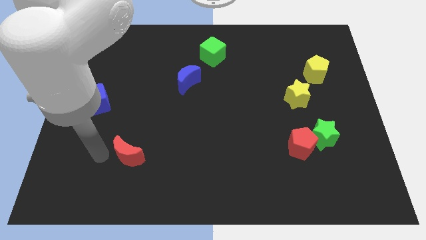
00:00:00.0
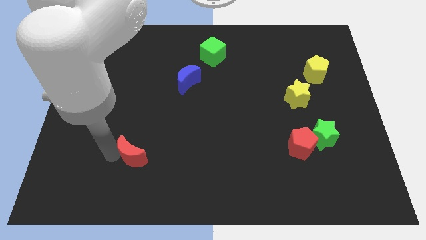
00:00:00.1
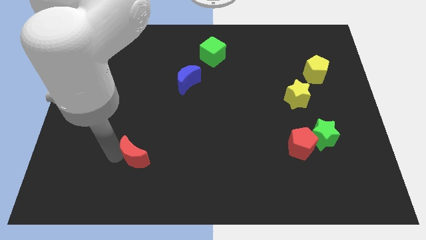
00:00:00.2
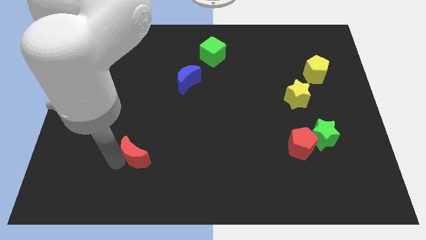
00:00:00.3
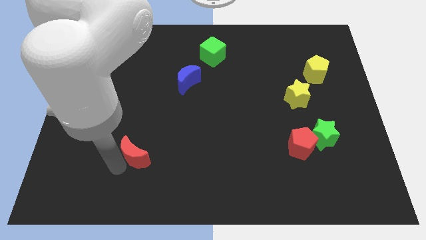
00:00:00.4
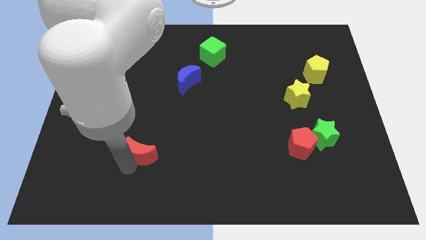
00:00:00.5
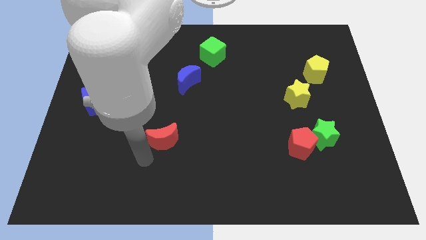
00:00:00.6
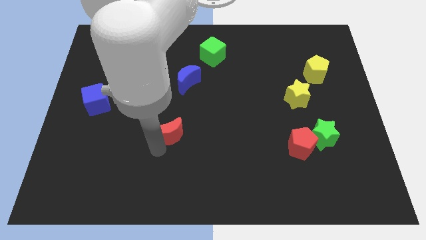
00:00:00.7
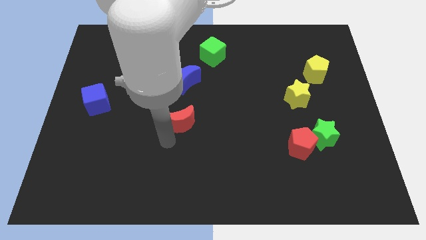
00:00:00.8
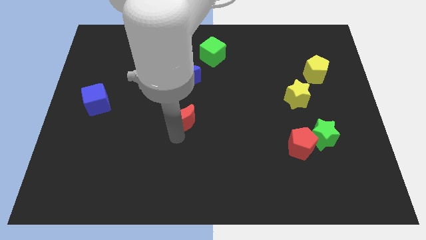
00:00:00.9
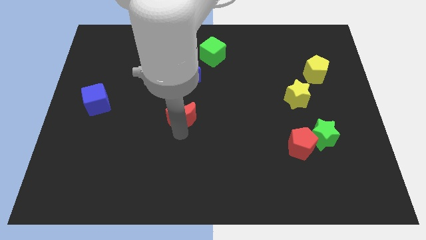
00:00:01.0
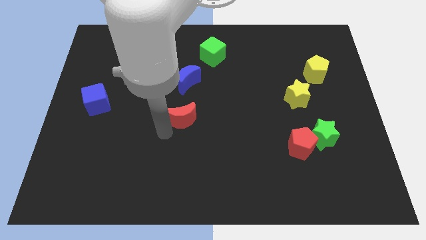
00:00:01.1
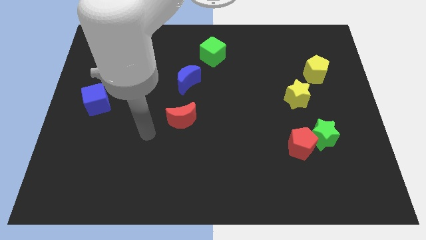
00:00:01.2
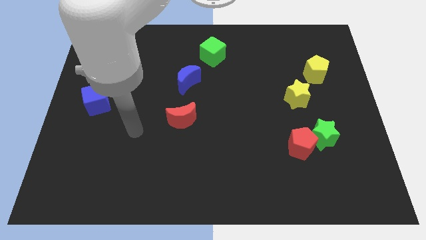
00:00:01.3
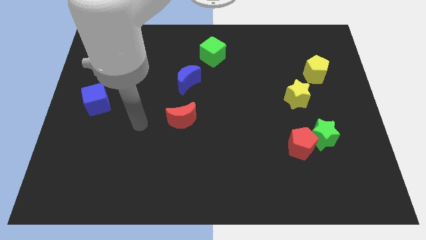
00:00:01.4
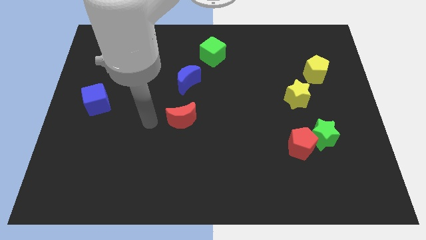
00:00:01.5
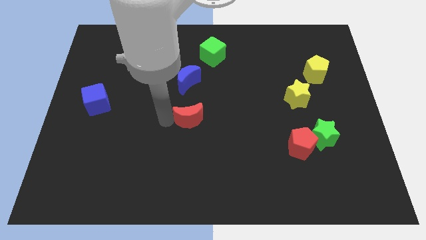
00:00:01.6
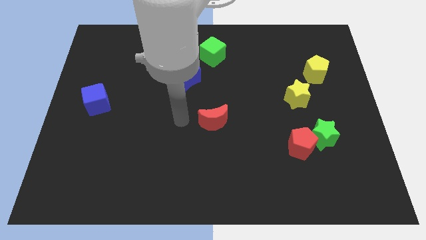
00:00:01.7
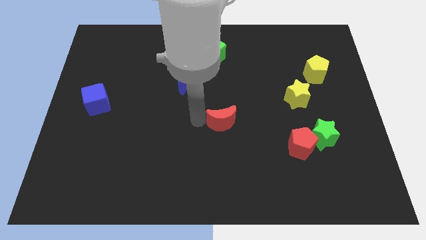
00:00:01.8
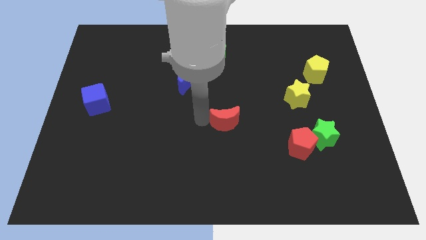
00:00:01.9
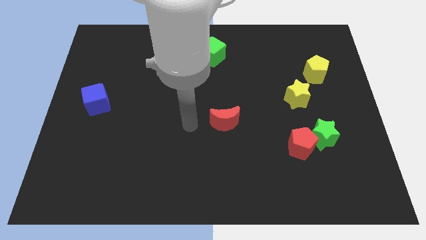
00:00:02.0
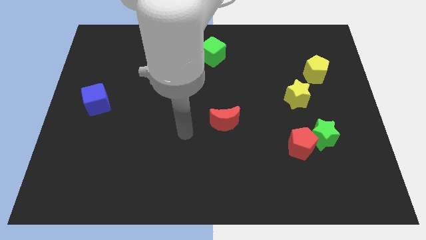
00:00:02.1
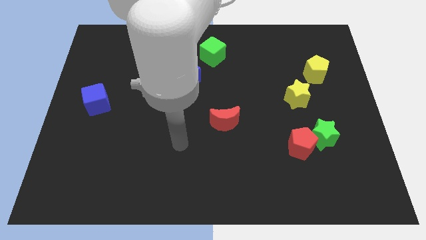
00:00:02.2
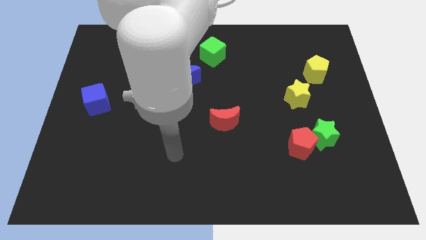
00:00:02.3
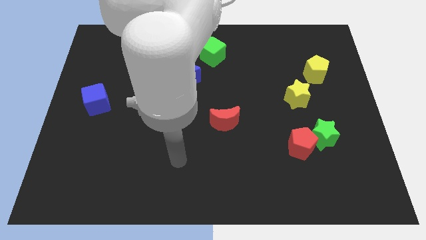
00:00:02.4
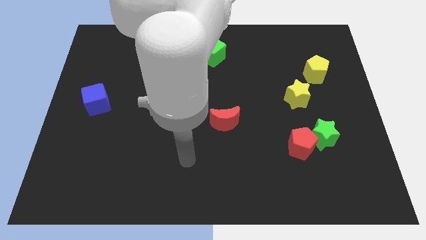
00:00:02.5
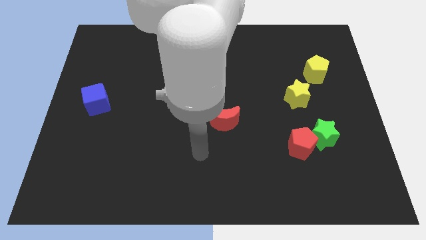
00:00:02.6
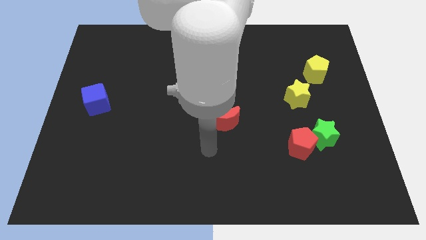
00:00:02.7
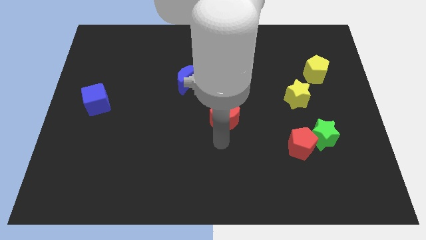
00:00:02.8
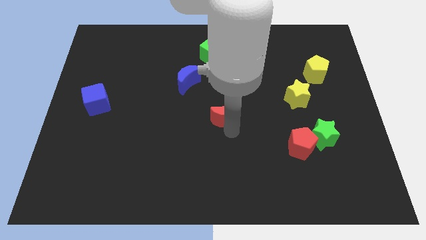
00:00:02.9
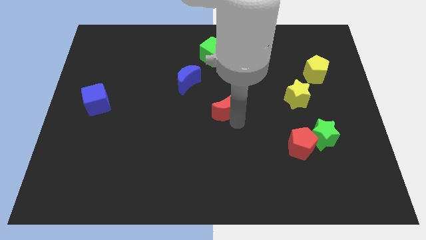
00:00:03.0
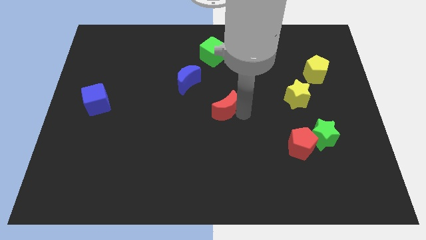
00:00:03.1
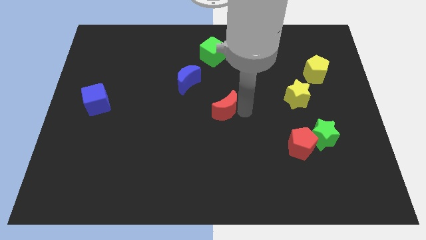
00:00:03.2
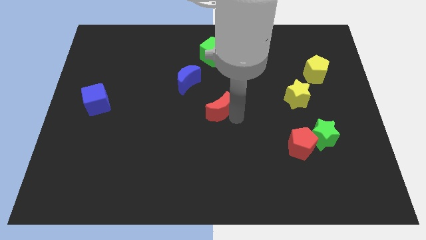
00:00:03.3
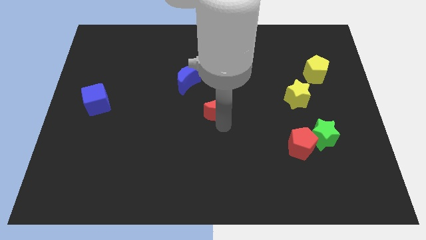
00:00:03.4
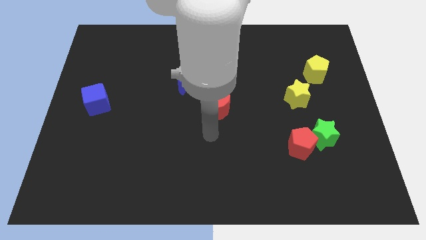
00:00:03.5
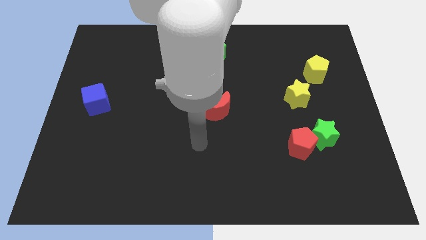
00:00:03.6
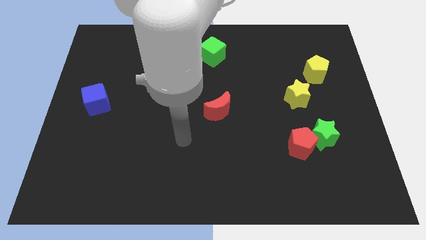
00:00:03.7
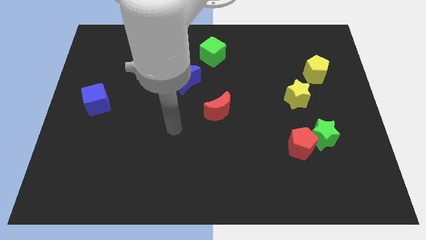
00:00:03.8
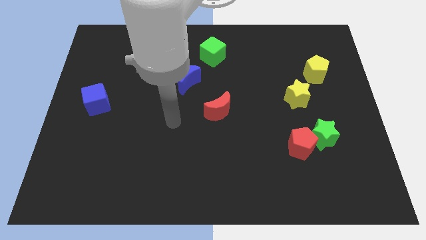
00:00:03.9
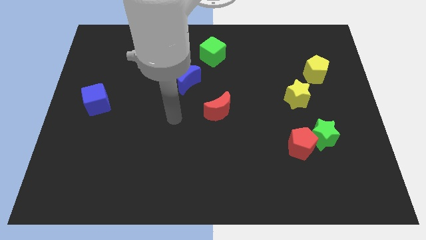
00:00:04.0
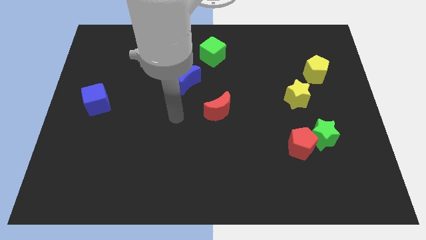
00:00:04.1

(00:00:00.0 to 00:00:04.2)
put the red moon between the blue moon and red pentagon

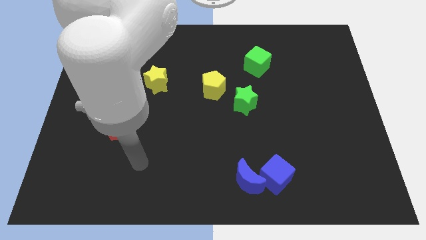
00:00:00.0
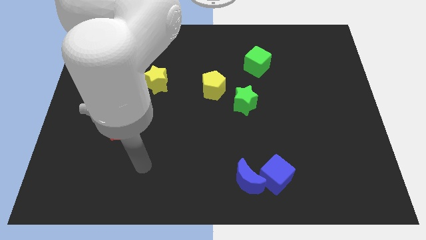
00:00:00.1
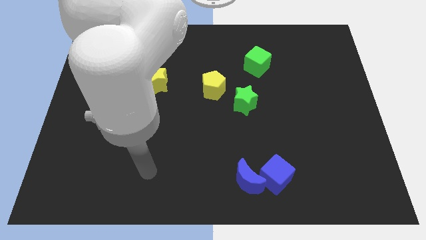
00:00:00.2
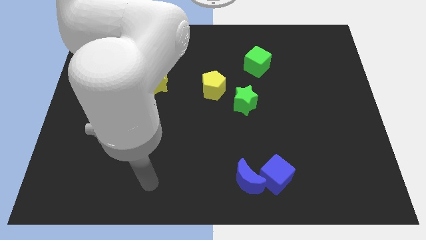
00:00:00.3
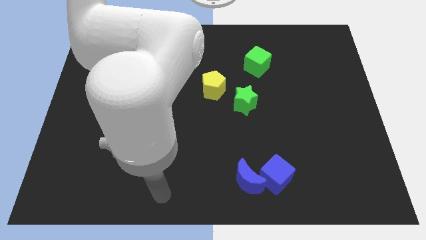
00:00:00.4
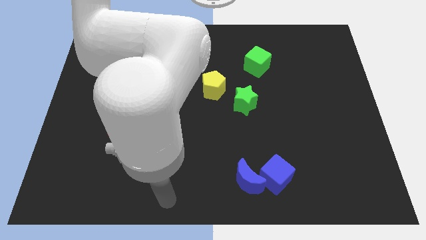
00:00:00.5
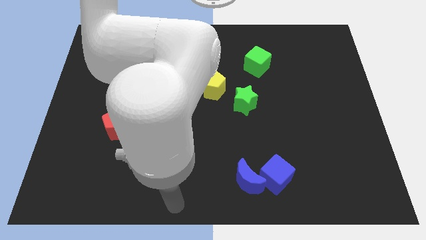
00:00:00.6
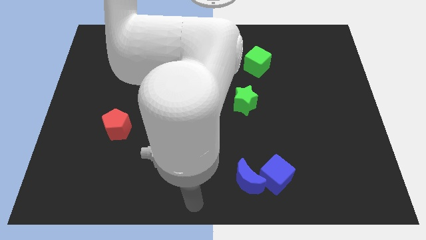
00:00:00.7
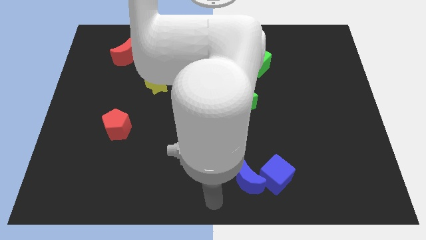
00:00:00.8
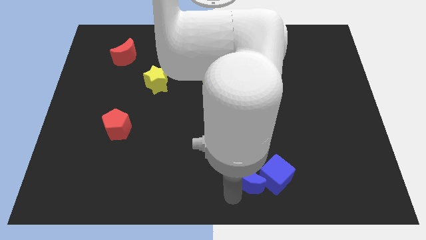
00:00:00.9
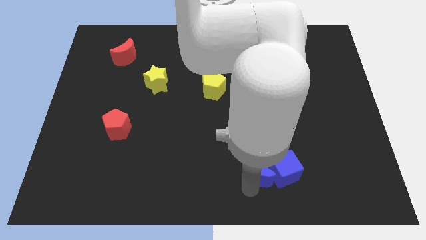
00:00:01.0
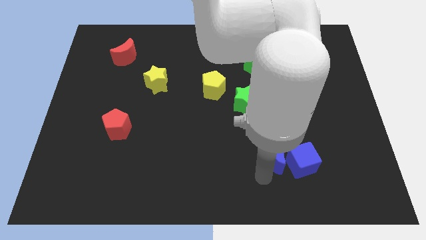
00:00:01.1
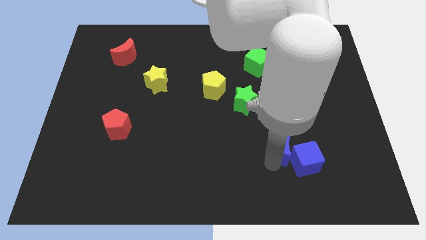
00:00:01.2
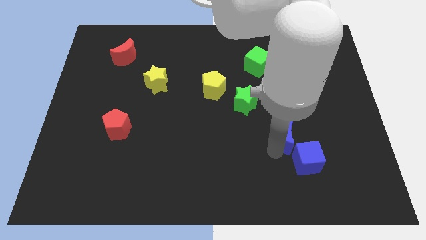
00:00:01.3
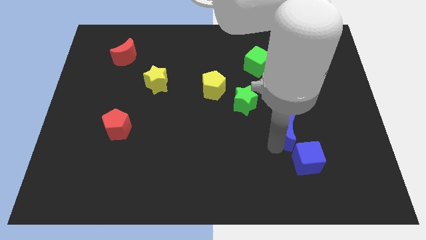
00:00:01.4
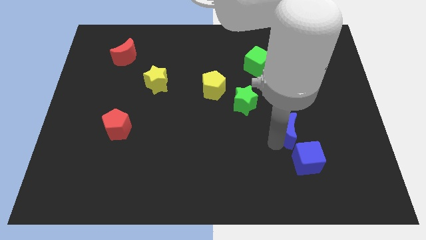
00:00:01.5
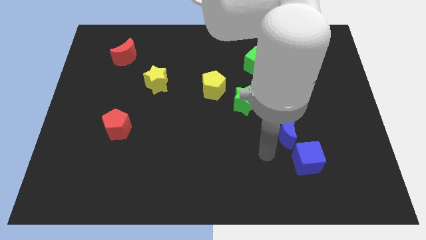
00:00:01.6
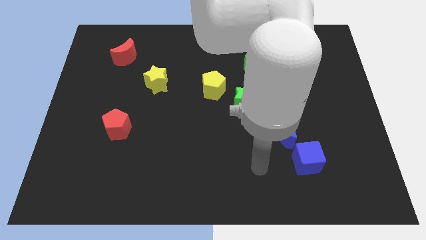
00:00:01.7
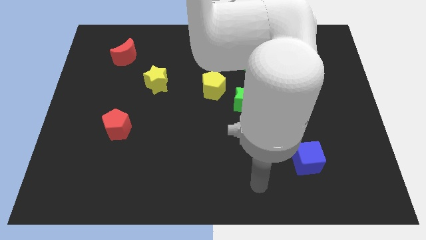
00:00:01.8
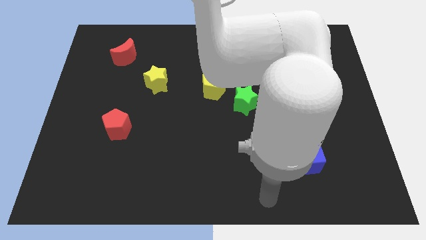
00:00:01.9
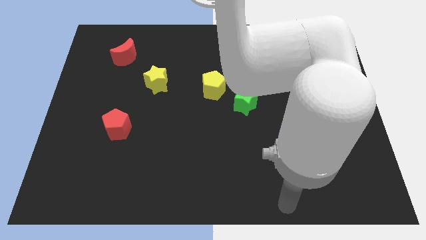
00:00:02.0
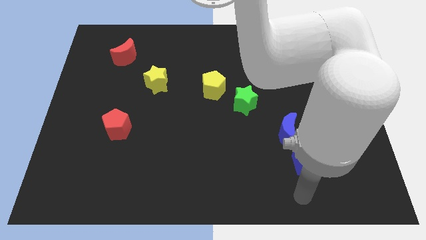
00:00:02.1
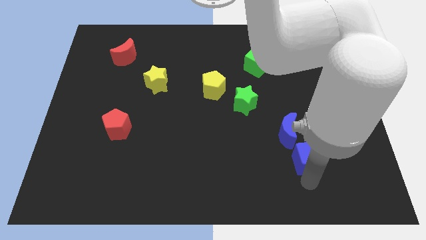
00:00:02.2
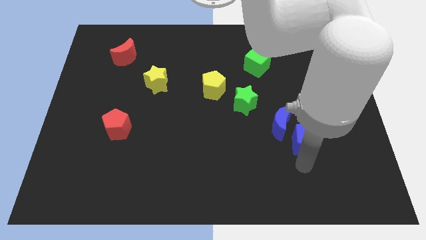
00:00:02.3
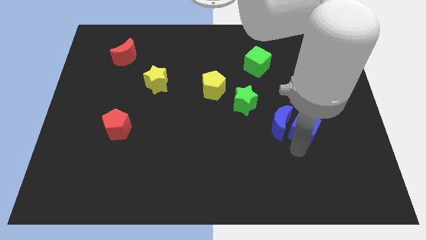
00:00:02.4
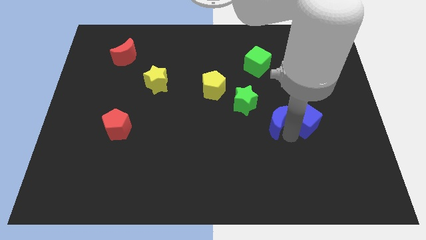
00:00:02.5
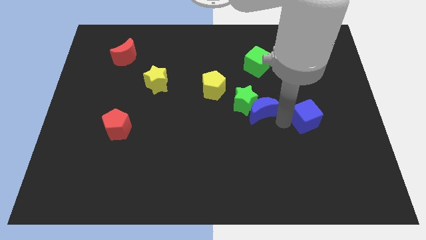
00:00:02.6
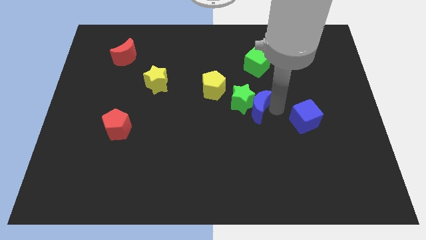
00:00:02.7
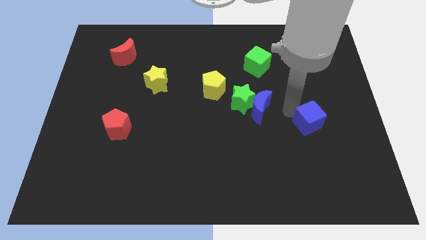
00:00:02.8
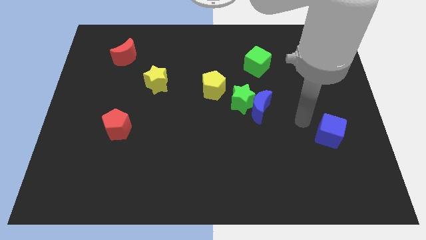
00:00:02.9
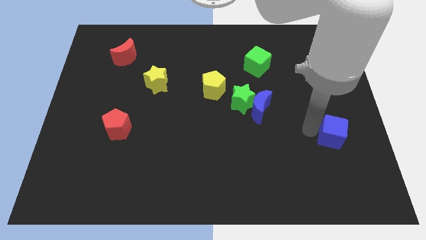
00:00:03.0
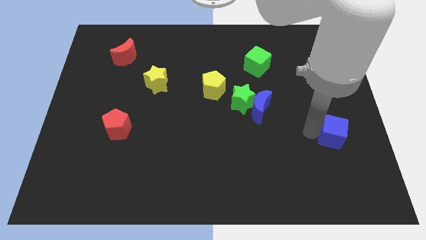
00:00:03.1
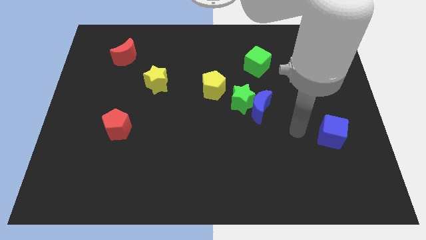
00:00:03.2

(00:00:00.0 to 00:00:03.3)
push the blue cube to the bottom right of the green star and blue crescent

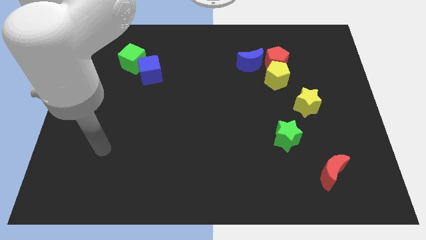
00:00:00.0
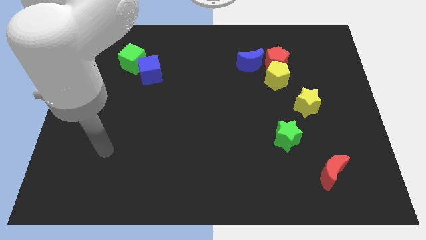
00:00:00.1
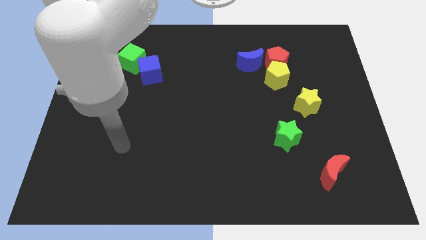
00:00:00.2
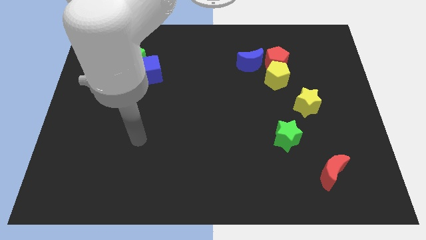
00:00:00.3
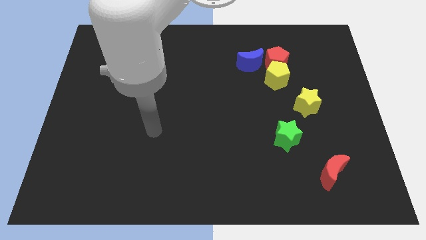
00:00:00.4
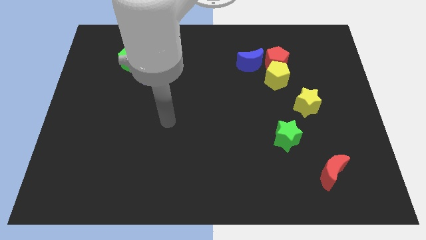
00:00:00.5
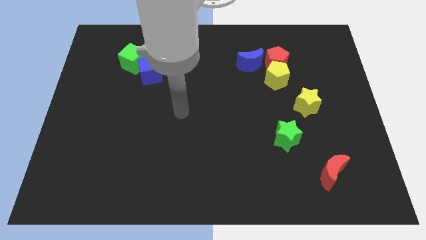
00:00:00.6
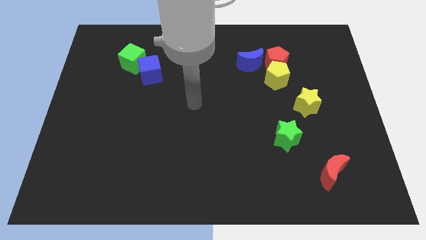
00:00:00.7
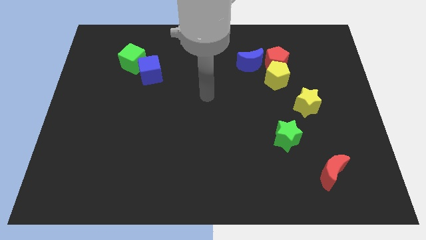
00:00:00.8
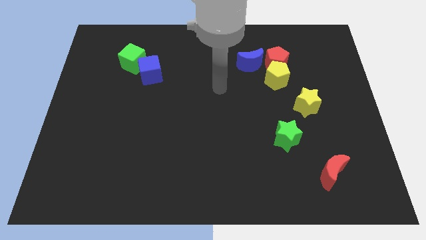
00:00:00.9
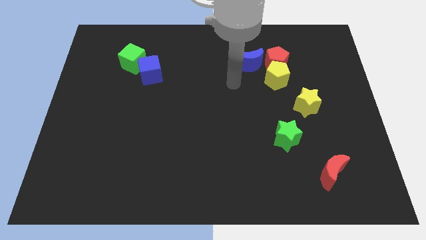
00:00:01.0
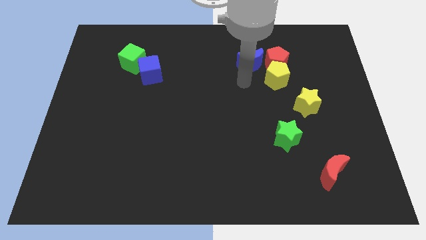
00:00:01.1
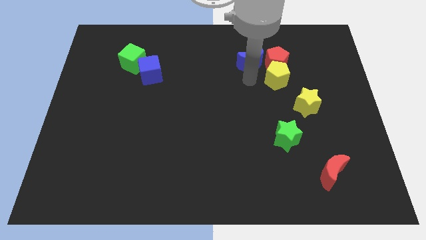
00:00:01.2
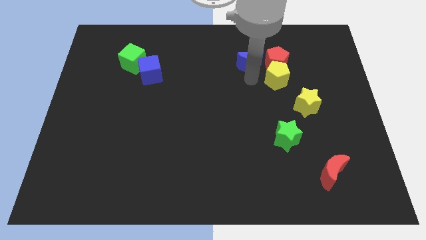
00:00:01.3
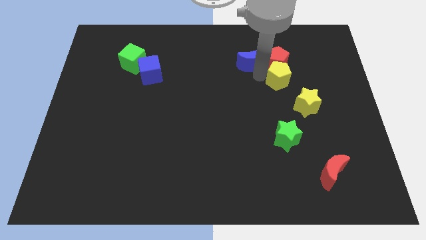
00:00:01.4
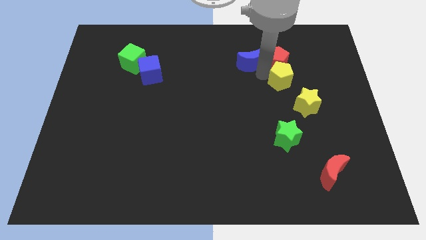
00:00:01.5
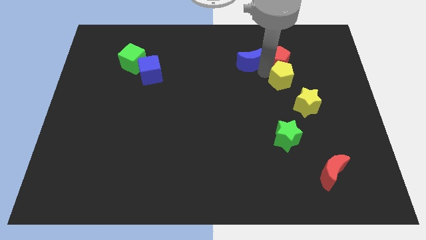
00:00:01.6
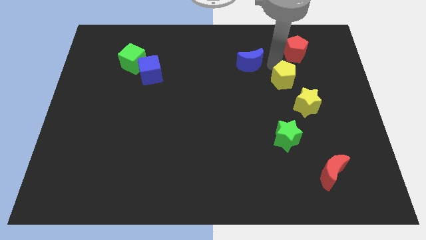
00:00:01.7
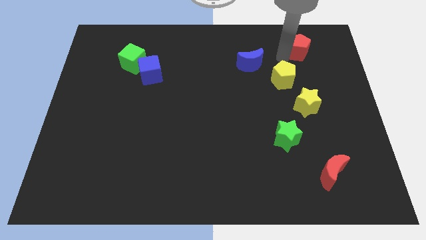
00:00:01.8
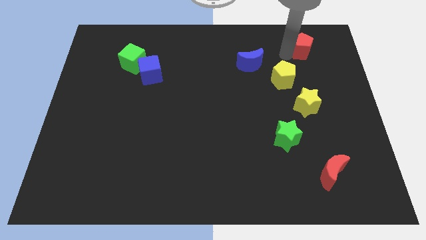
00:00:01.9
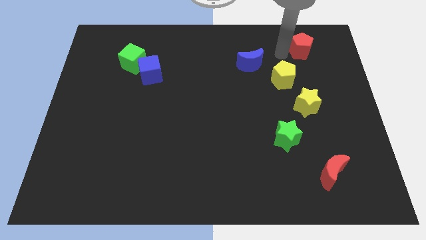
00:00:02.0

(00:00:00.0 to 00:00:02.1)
push the red pentagon away from the yellow pentagon
